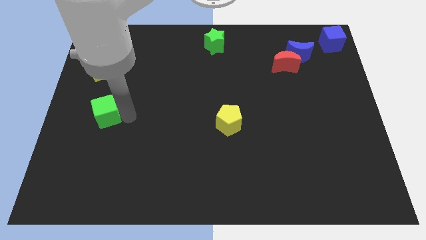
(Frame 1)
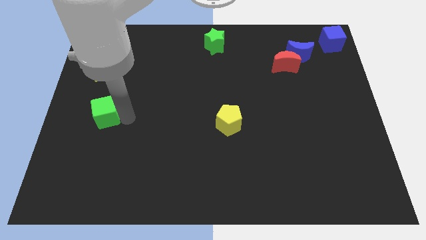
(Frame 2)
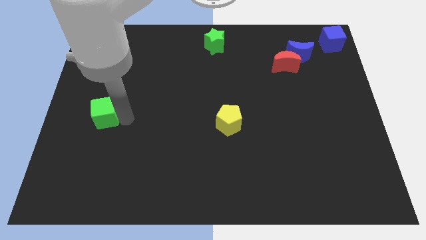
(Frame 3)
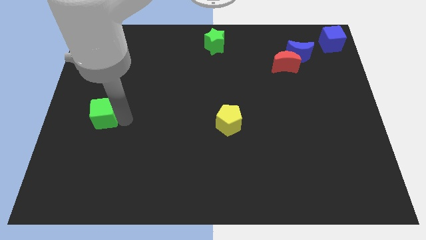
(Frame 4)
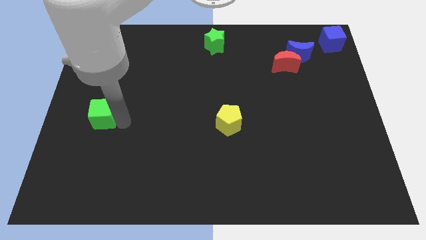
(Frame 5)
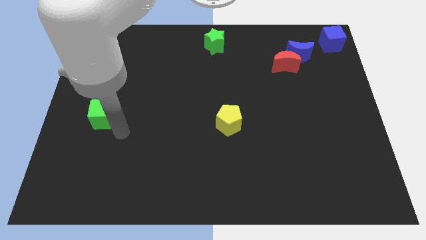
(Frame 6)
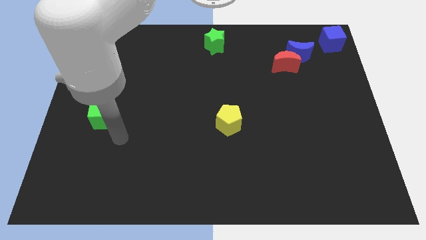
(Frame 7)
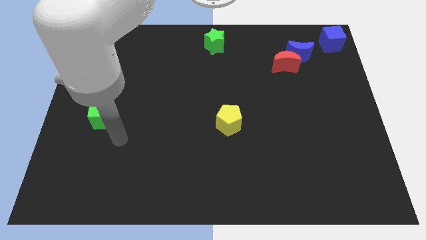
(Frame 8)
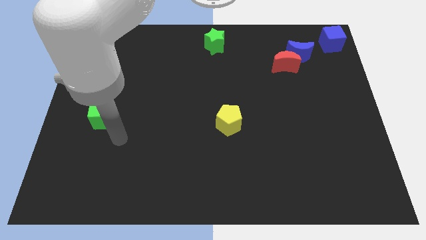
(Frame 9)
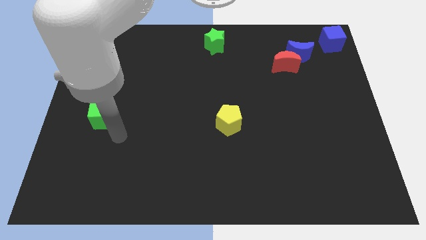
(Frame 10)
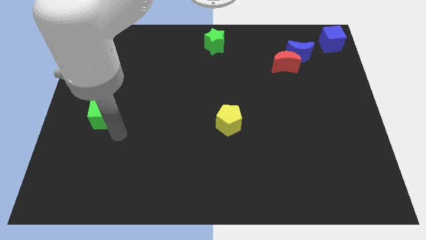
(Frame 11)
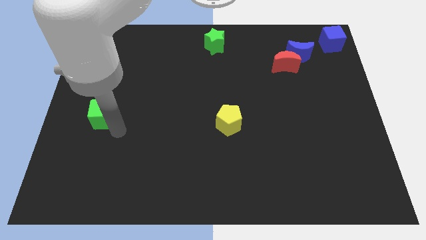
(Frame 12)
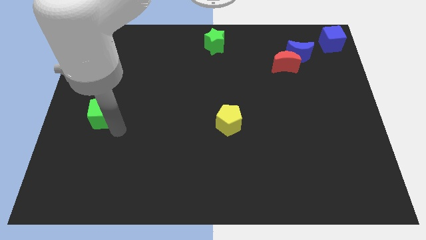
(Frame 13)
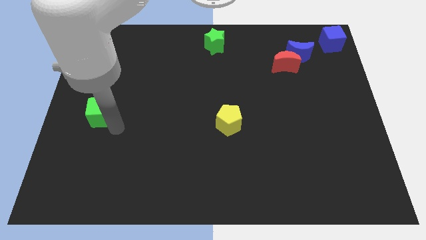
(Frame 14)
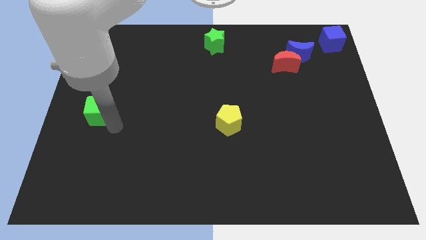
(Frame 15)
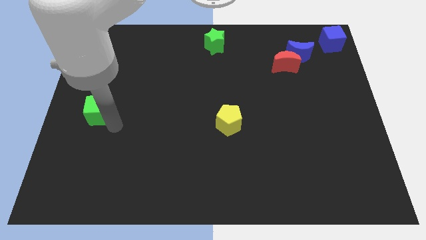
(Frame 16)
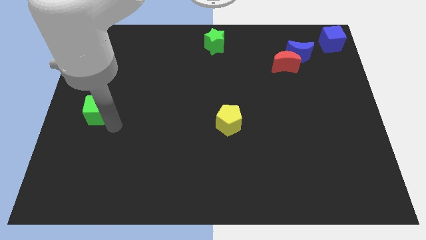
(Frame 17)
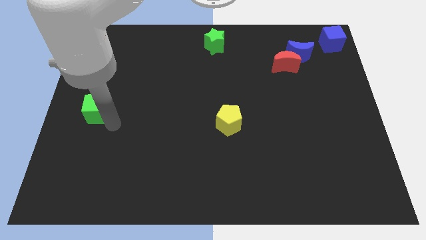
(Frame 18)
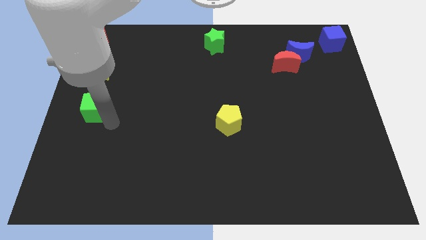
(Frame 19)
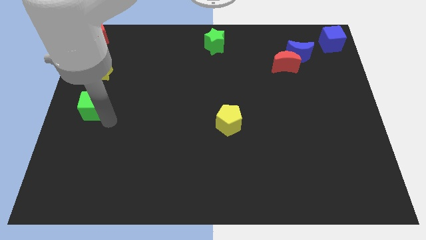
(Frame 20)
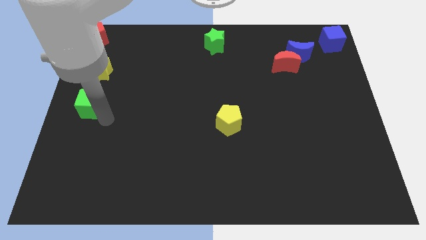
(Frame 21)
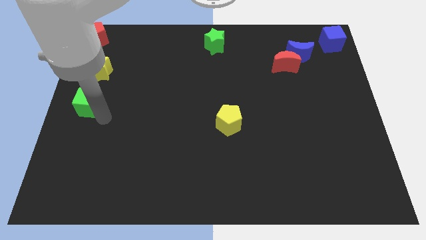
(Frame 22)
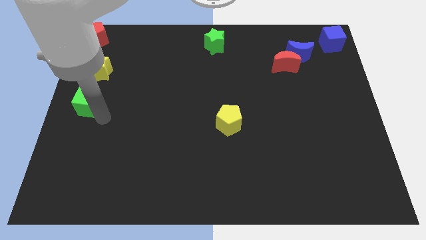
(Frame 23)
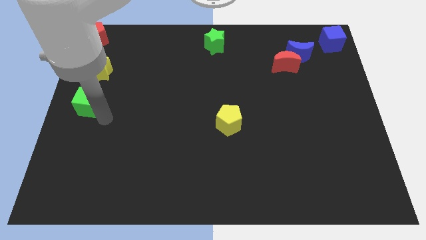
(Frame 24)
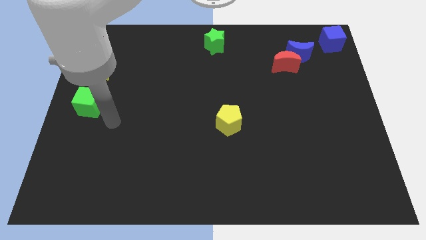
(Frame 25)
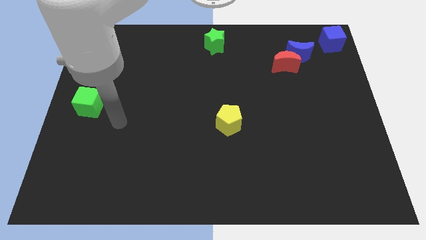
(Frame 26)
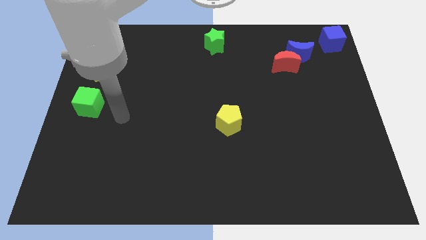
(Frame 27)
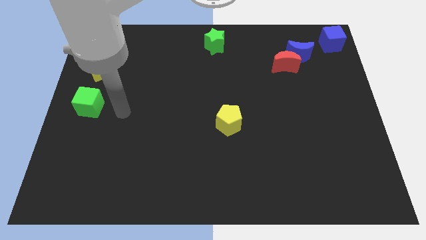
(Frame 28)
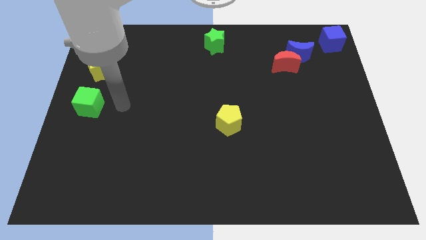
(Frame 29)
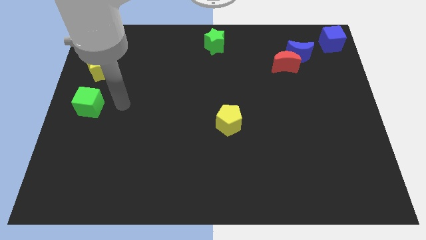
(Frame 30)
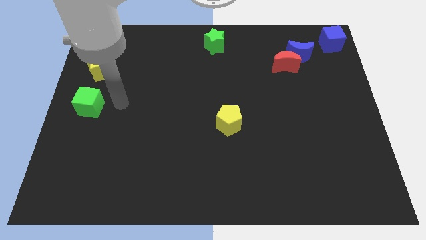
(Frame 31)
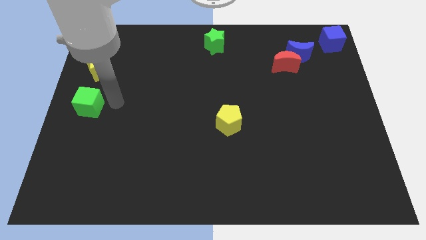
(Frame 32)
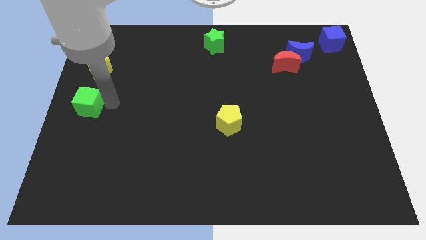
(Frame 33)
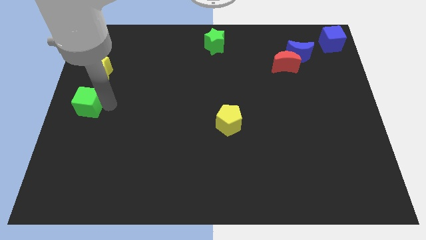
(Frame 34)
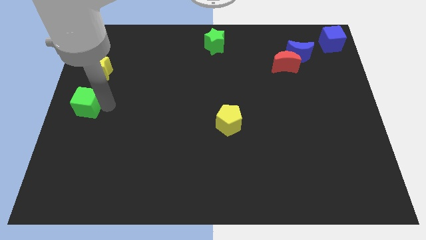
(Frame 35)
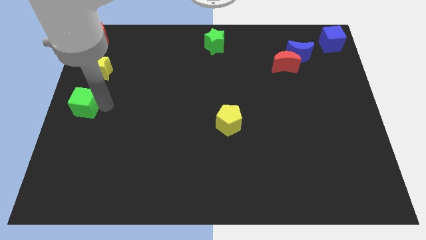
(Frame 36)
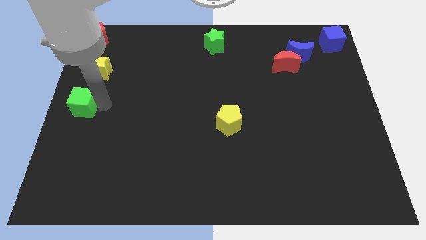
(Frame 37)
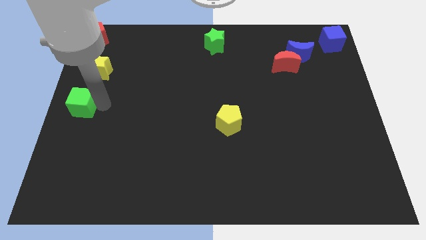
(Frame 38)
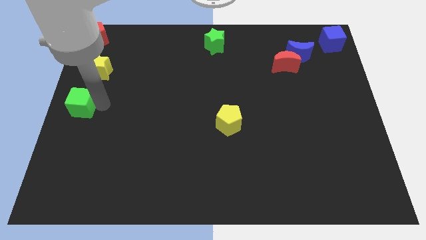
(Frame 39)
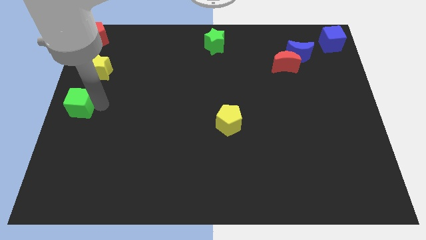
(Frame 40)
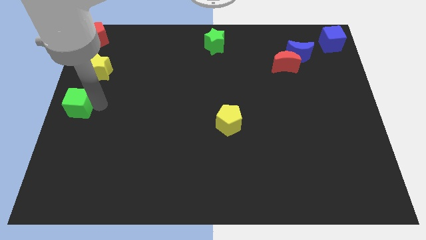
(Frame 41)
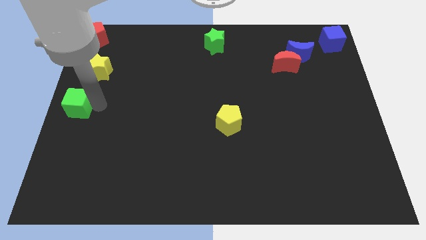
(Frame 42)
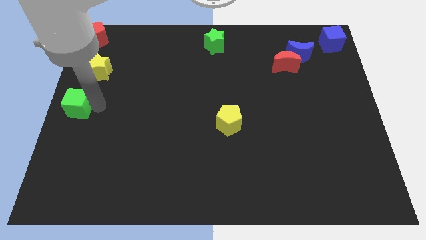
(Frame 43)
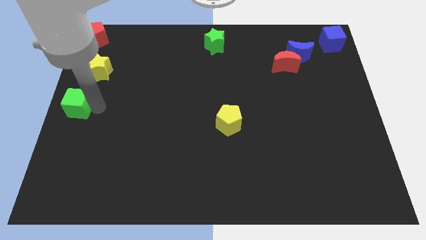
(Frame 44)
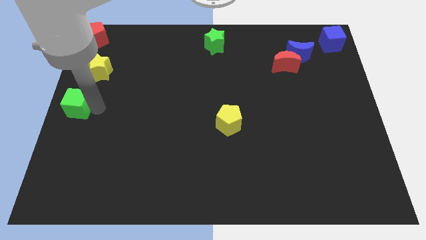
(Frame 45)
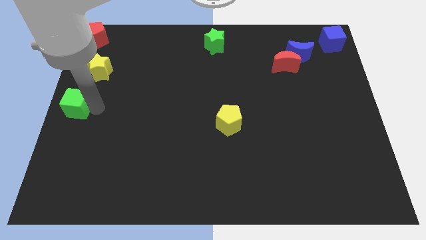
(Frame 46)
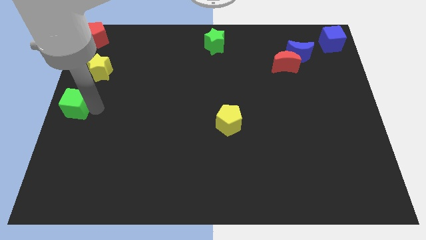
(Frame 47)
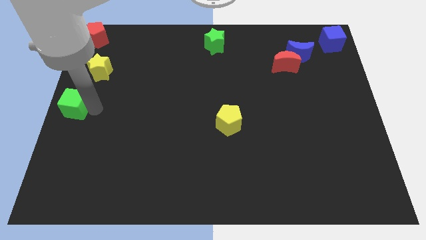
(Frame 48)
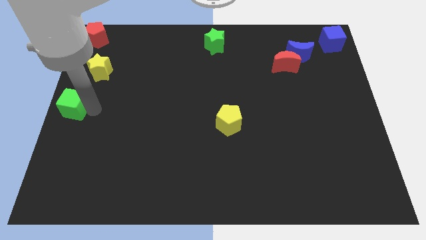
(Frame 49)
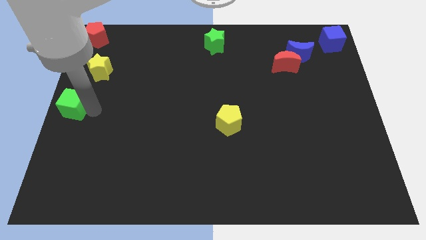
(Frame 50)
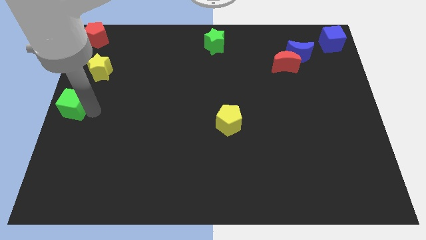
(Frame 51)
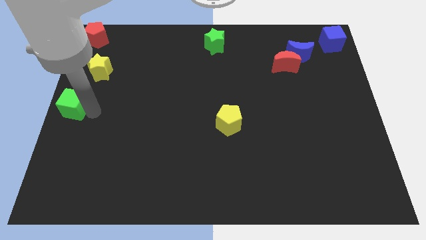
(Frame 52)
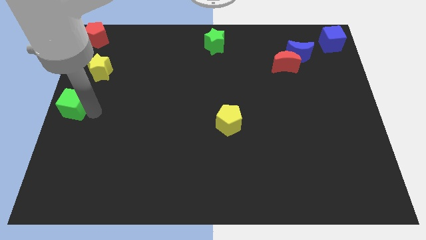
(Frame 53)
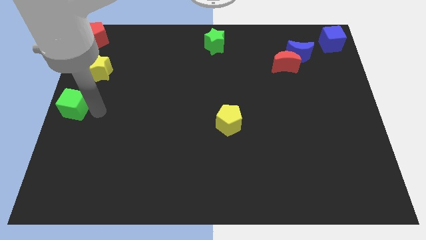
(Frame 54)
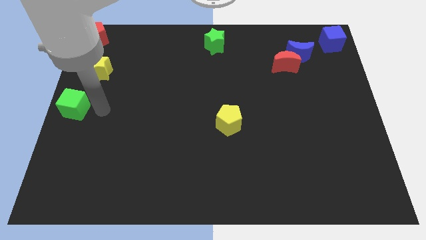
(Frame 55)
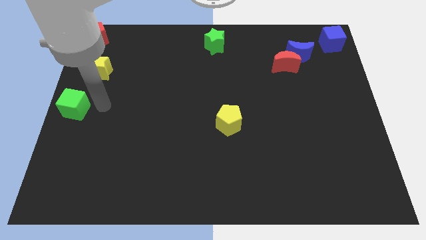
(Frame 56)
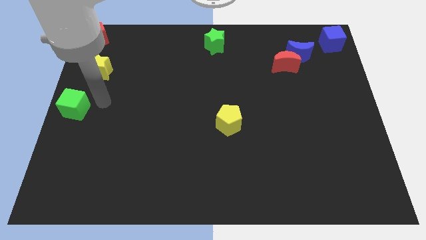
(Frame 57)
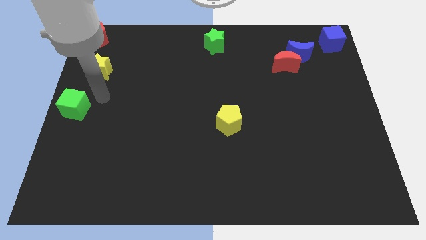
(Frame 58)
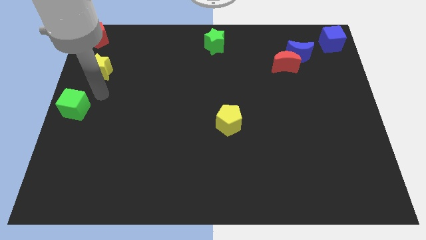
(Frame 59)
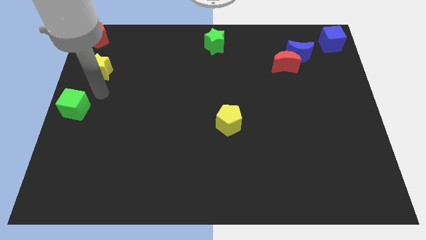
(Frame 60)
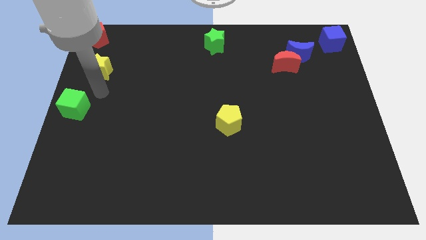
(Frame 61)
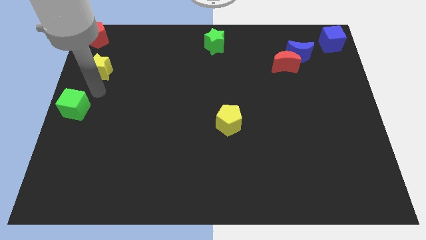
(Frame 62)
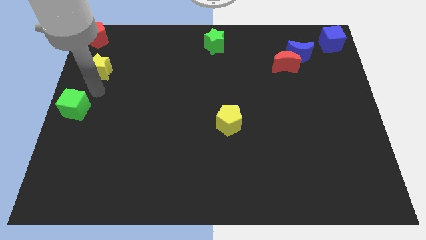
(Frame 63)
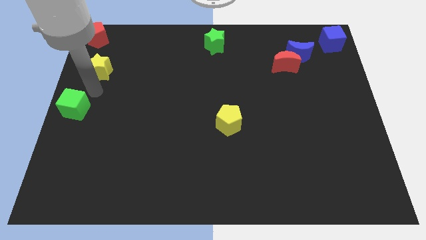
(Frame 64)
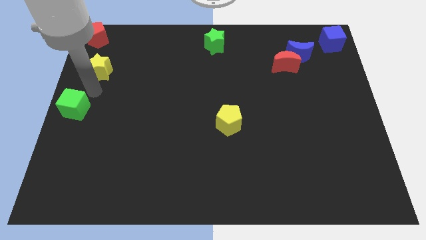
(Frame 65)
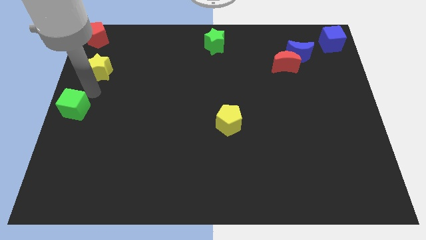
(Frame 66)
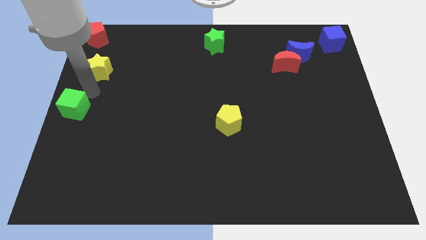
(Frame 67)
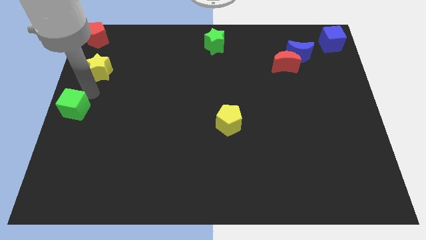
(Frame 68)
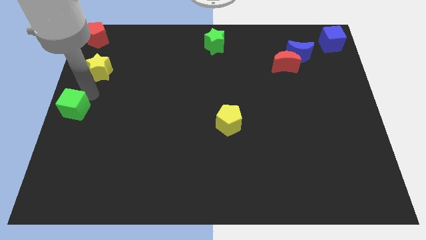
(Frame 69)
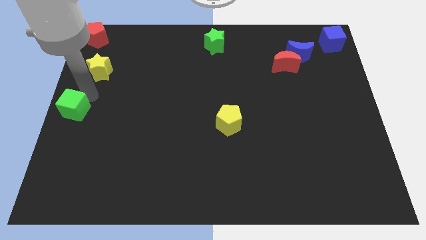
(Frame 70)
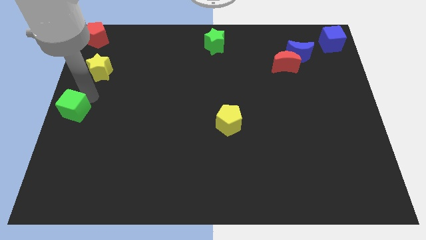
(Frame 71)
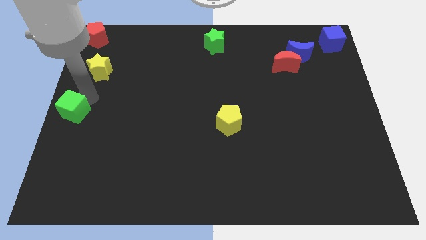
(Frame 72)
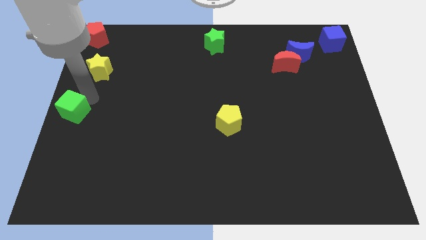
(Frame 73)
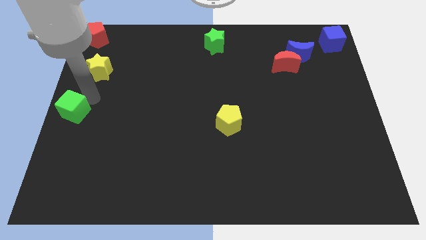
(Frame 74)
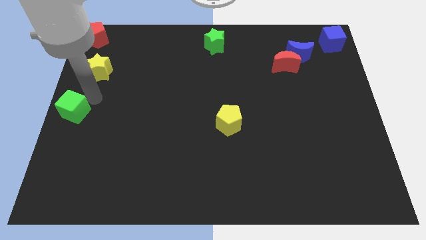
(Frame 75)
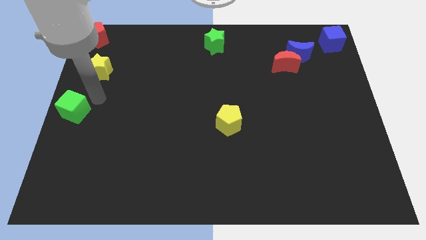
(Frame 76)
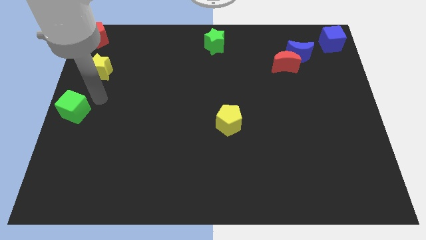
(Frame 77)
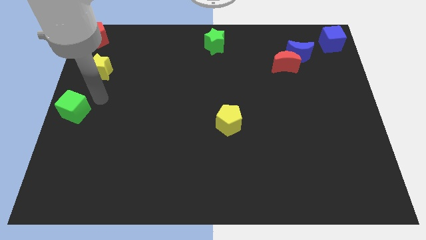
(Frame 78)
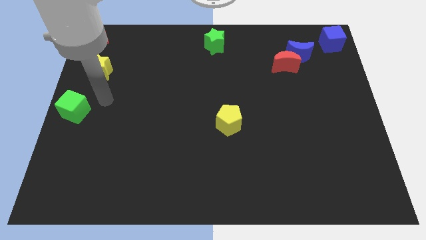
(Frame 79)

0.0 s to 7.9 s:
place the green cube at the center left side of the board

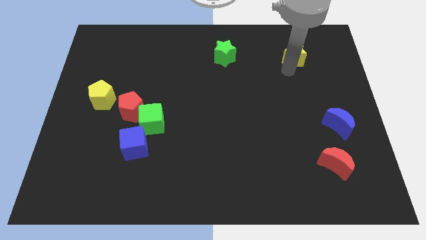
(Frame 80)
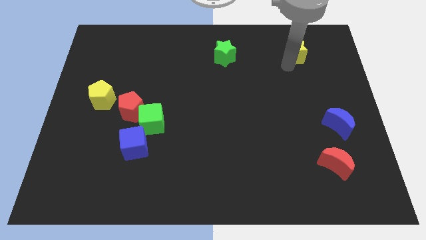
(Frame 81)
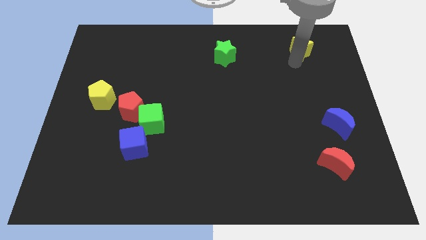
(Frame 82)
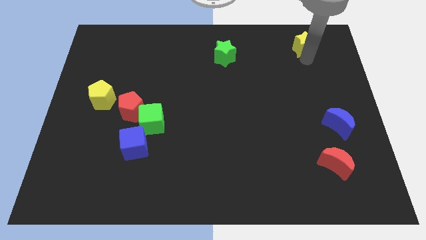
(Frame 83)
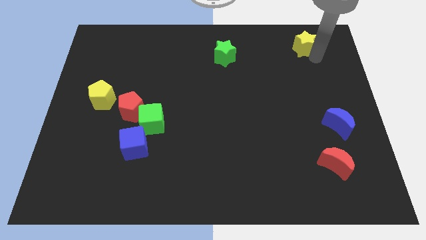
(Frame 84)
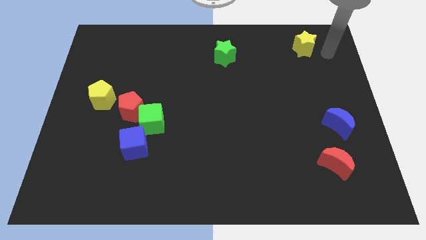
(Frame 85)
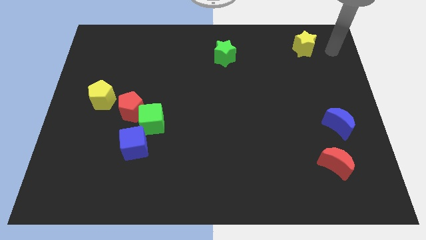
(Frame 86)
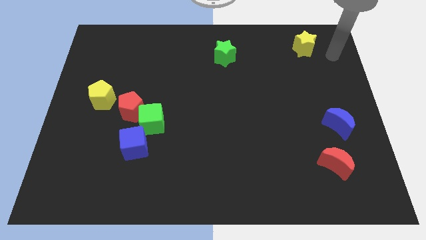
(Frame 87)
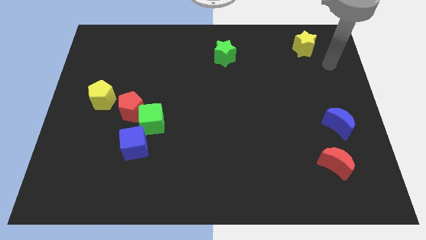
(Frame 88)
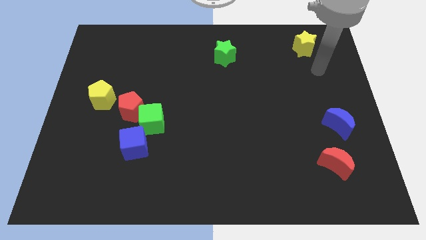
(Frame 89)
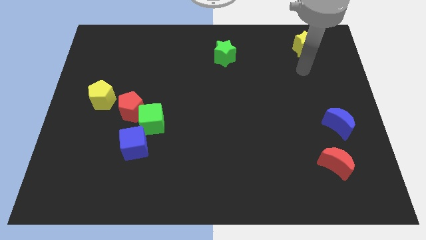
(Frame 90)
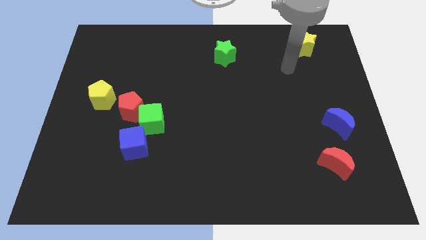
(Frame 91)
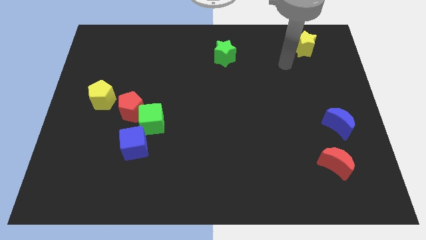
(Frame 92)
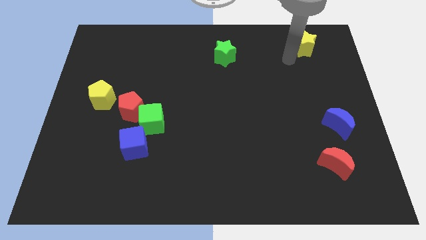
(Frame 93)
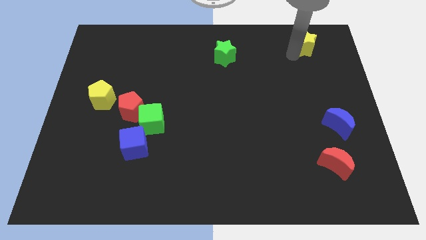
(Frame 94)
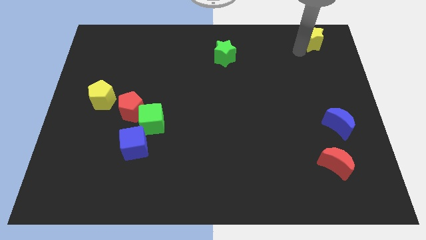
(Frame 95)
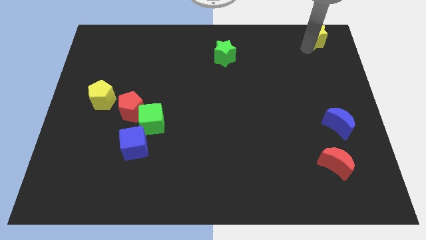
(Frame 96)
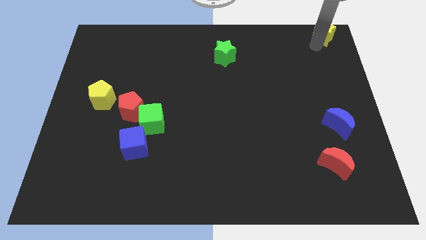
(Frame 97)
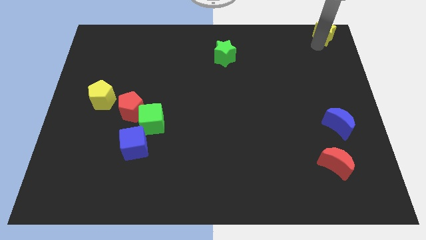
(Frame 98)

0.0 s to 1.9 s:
move the yellow star to the top right corner
